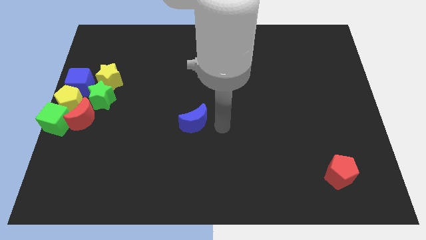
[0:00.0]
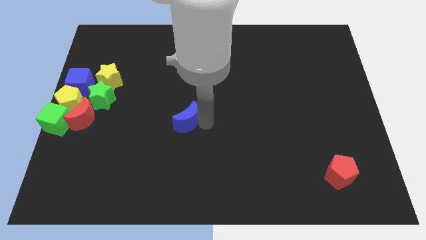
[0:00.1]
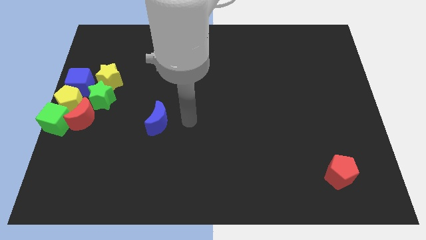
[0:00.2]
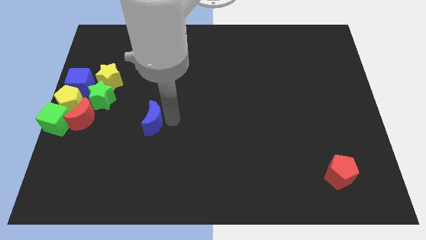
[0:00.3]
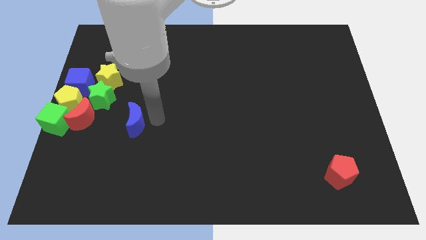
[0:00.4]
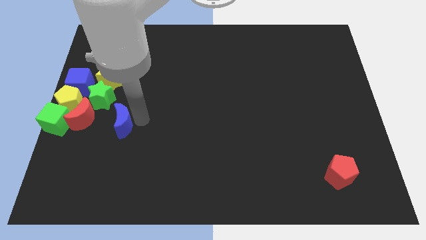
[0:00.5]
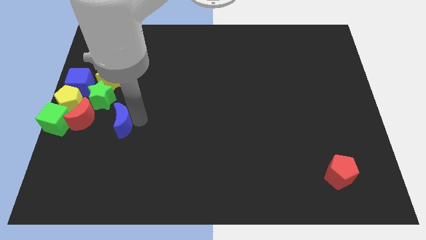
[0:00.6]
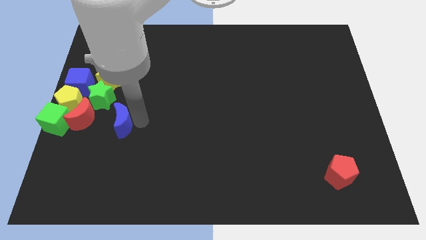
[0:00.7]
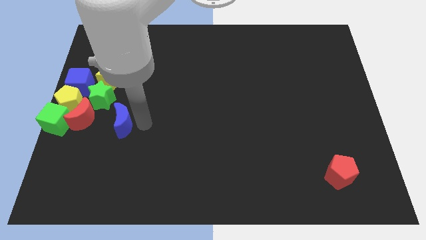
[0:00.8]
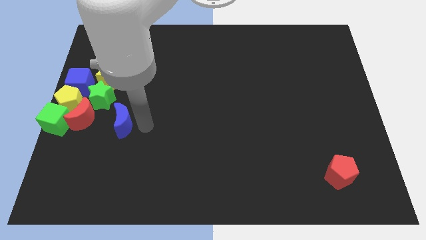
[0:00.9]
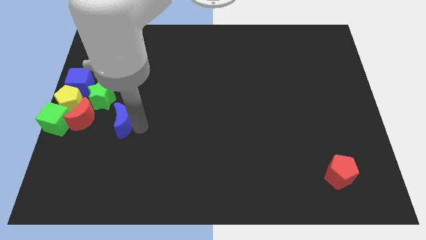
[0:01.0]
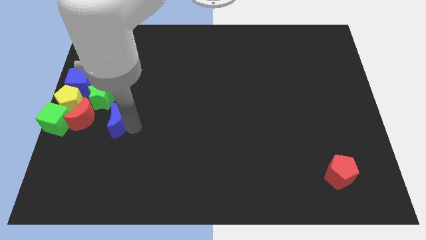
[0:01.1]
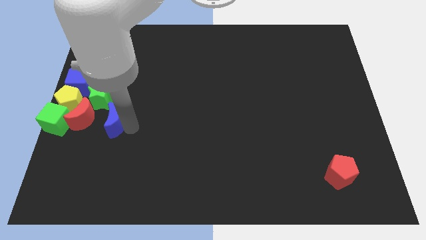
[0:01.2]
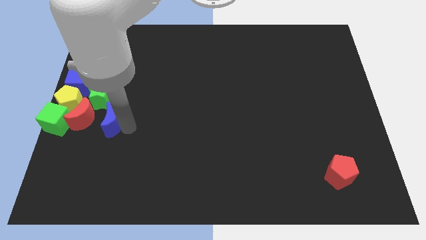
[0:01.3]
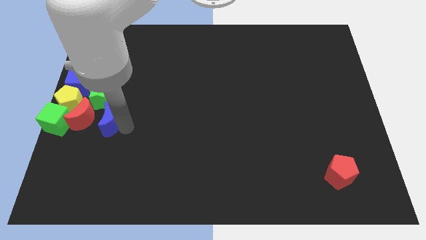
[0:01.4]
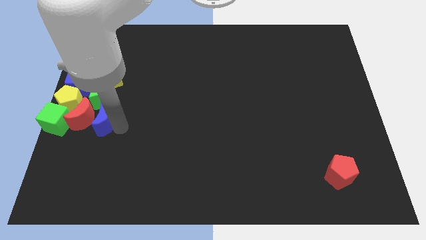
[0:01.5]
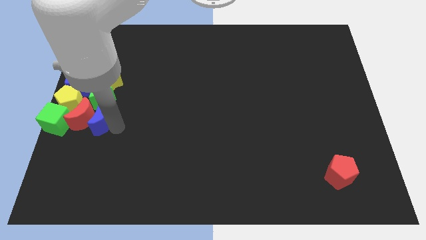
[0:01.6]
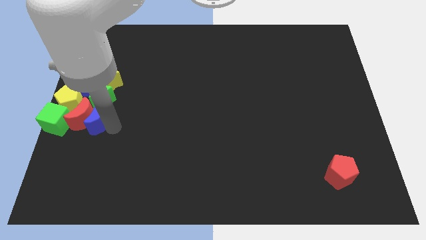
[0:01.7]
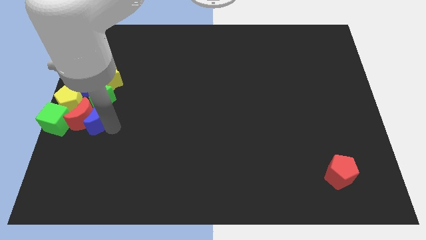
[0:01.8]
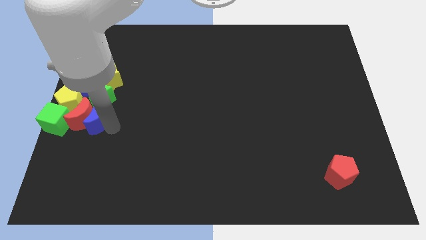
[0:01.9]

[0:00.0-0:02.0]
drag the blue moon into the group of blocks

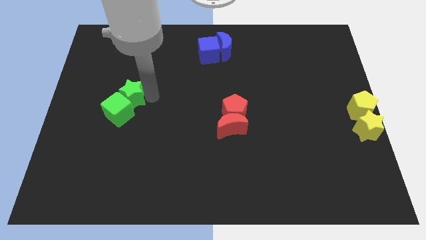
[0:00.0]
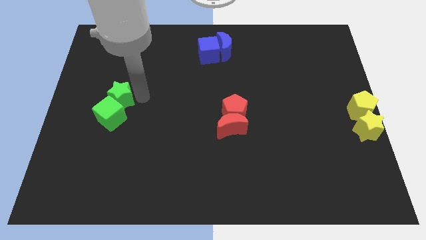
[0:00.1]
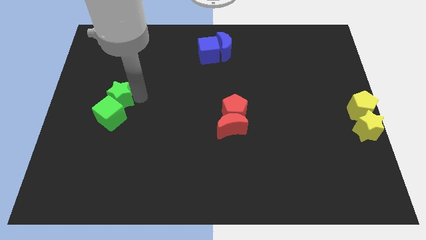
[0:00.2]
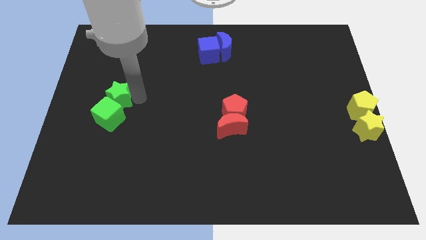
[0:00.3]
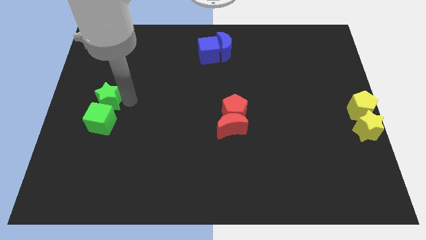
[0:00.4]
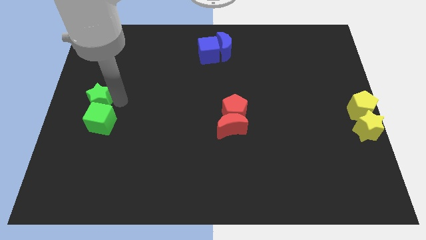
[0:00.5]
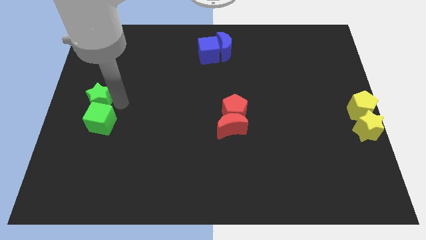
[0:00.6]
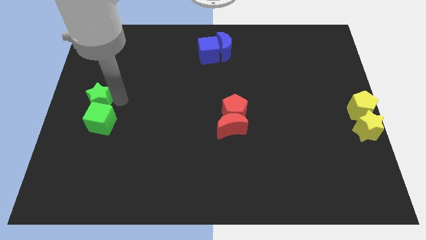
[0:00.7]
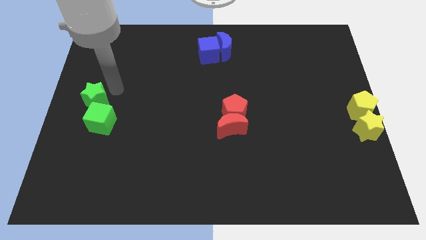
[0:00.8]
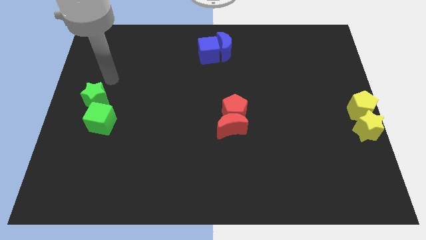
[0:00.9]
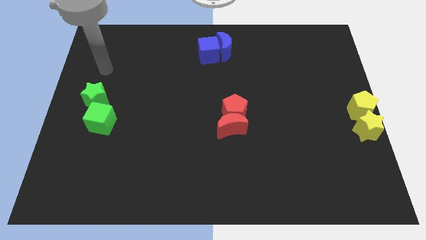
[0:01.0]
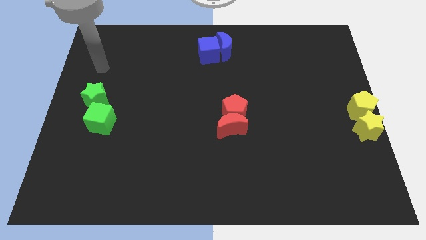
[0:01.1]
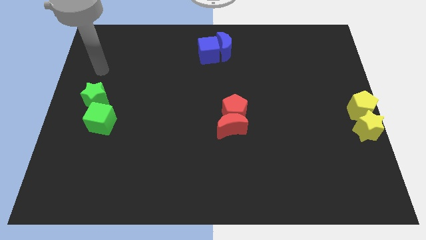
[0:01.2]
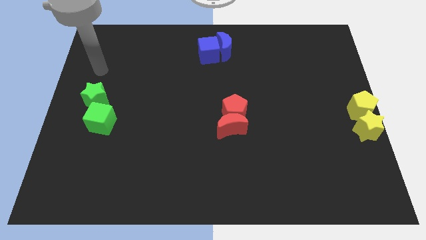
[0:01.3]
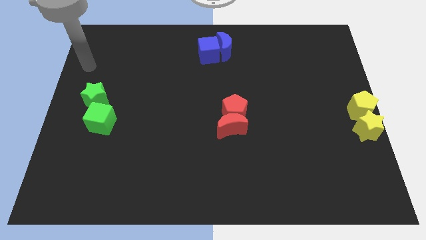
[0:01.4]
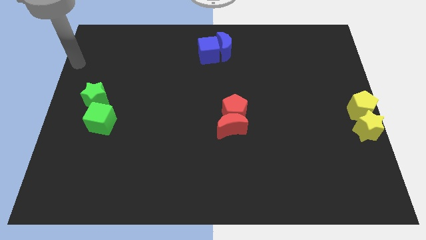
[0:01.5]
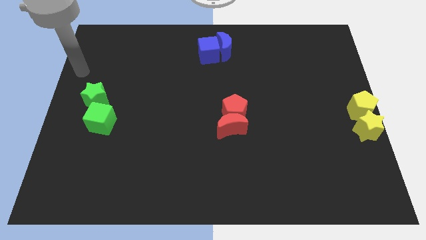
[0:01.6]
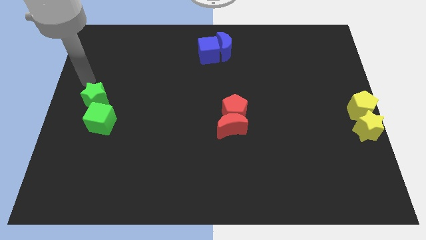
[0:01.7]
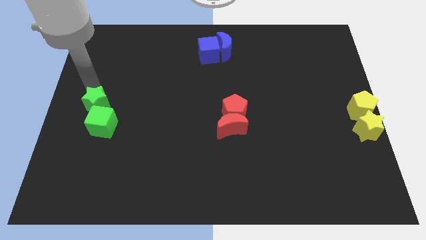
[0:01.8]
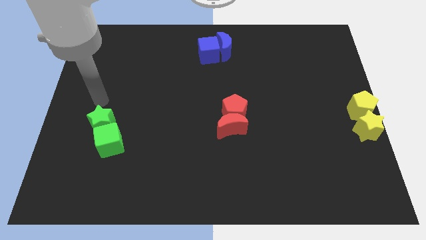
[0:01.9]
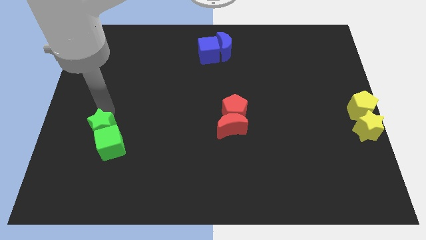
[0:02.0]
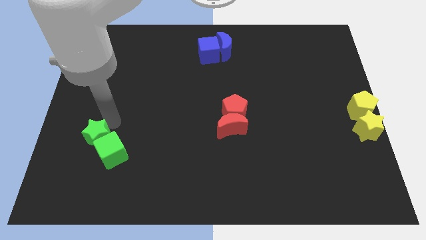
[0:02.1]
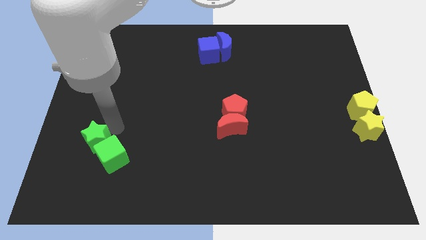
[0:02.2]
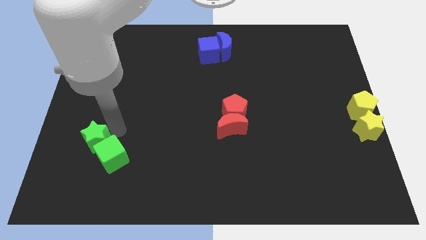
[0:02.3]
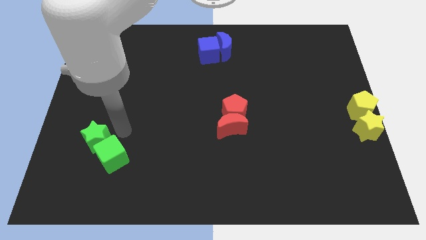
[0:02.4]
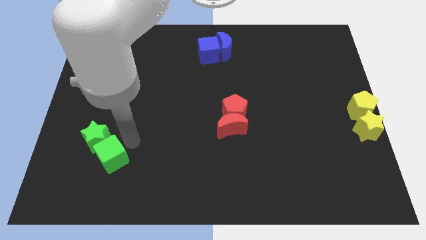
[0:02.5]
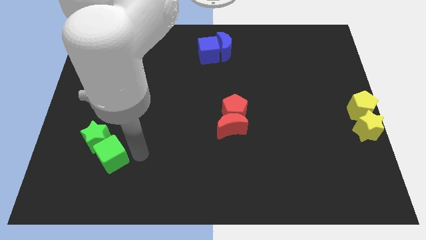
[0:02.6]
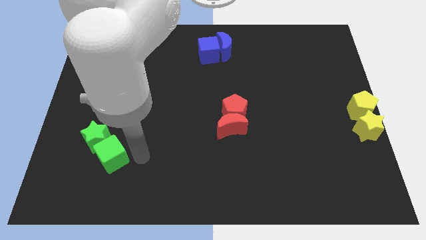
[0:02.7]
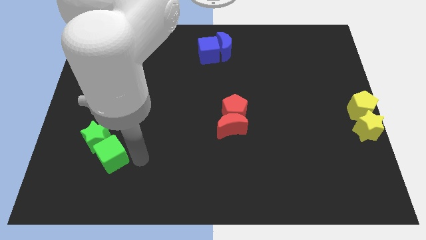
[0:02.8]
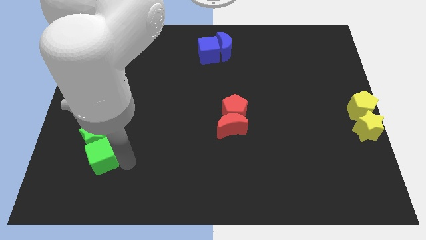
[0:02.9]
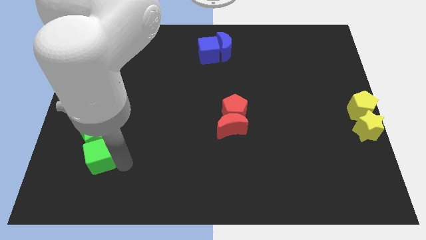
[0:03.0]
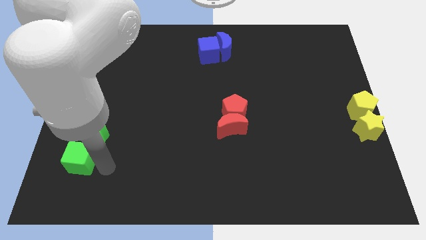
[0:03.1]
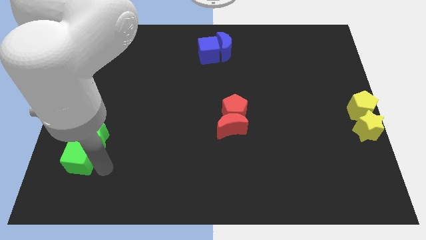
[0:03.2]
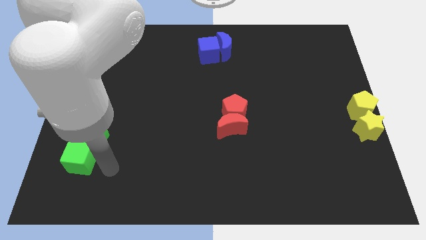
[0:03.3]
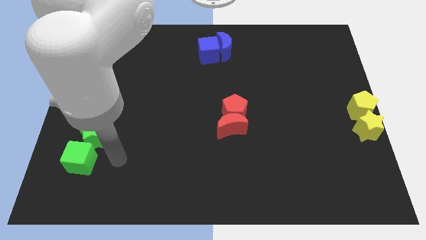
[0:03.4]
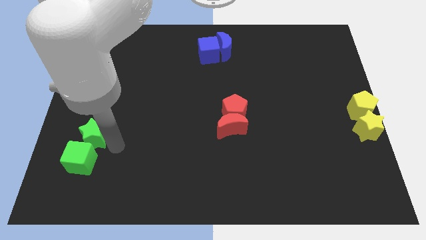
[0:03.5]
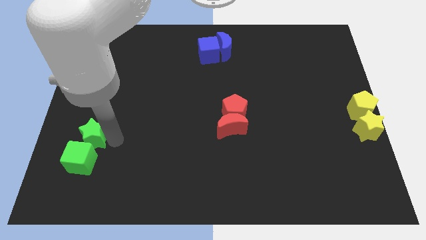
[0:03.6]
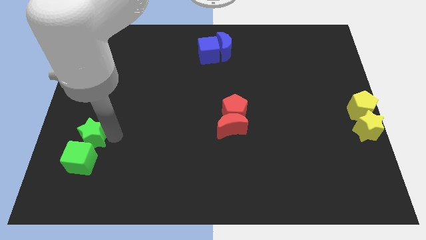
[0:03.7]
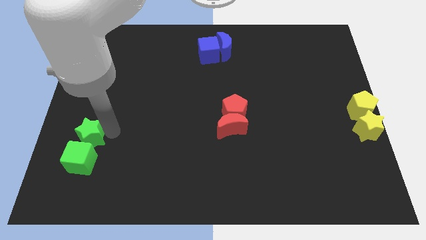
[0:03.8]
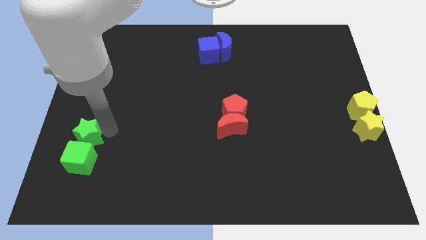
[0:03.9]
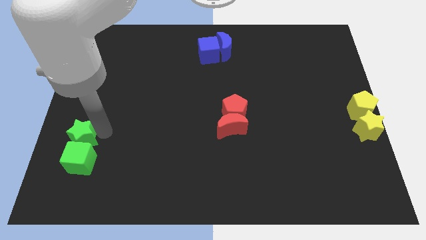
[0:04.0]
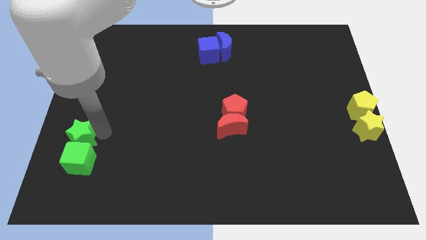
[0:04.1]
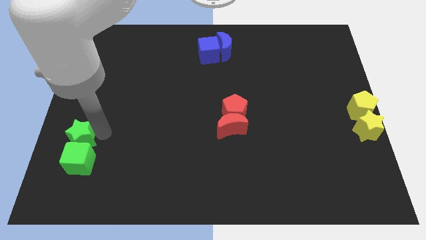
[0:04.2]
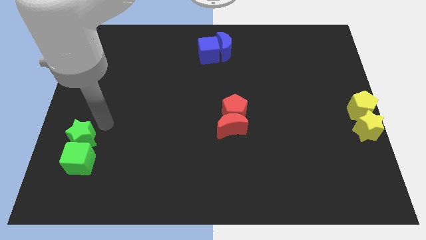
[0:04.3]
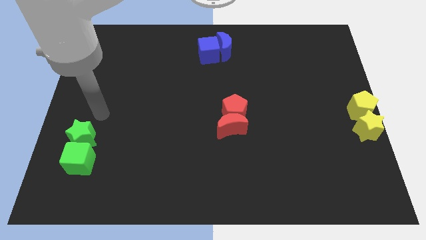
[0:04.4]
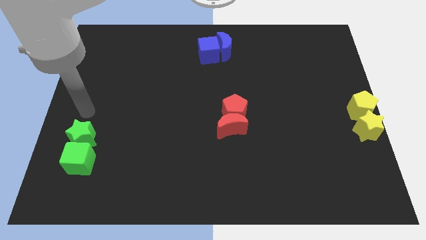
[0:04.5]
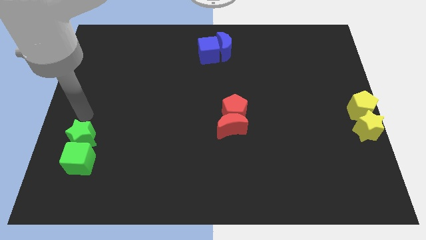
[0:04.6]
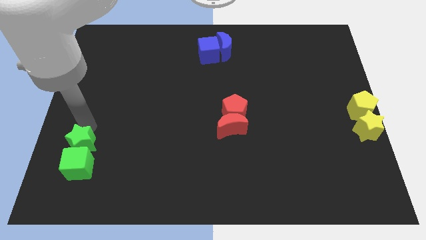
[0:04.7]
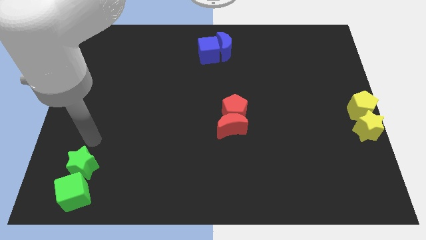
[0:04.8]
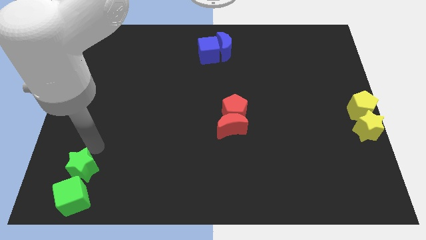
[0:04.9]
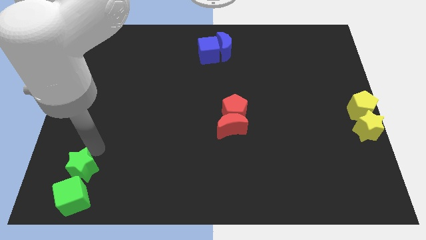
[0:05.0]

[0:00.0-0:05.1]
push the green blocks towards the bottom left corner of the board

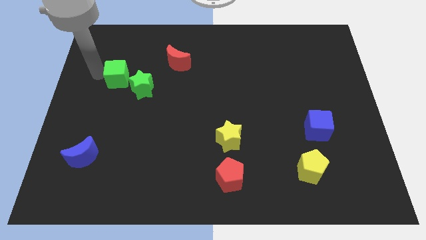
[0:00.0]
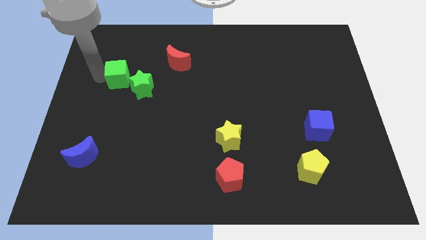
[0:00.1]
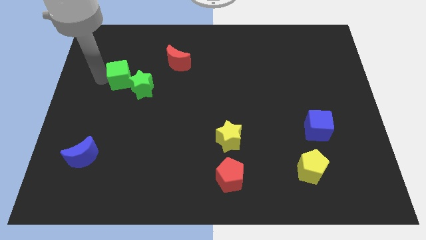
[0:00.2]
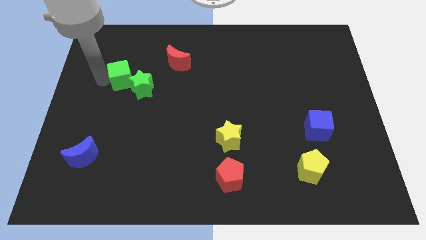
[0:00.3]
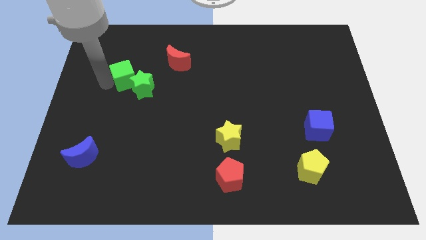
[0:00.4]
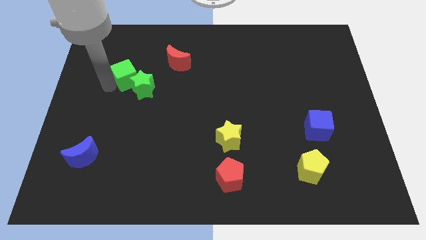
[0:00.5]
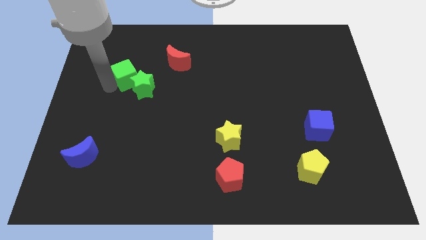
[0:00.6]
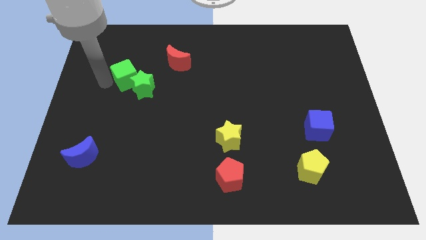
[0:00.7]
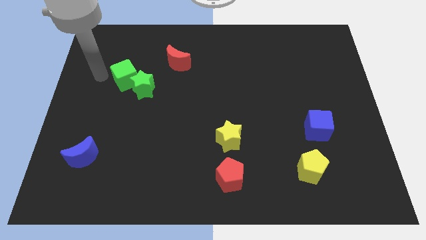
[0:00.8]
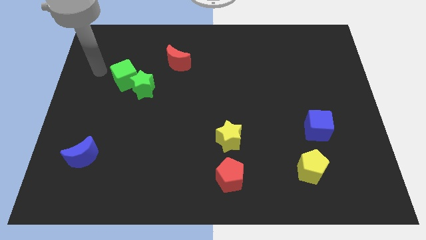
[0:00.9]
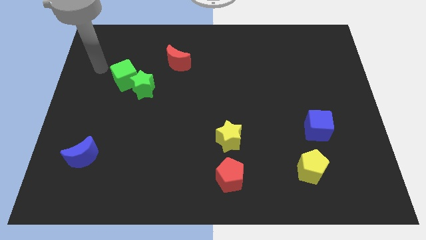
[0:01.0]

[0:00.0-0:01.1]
push the green cube into the green star diagonally

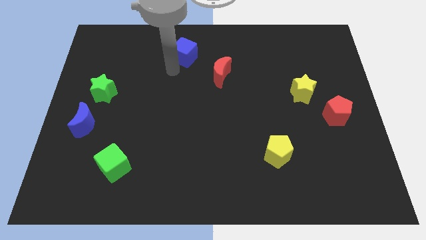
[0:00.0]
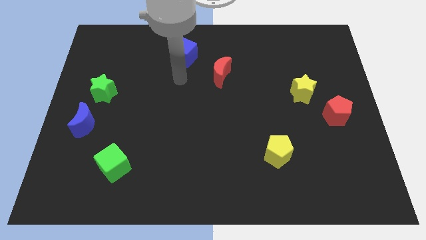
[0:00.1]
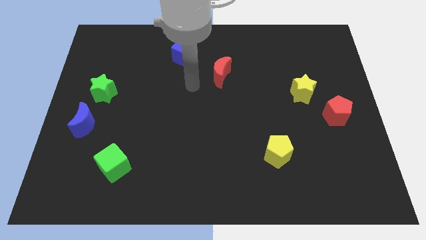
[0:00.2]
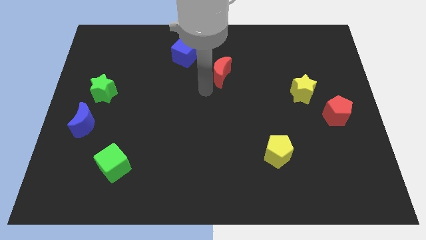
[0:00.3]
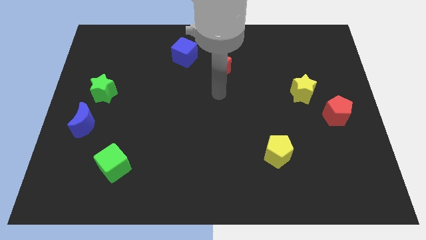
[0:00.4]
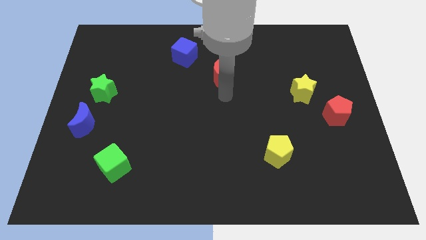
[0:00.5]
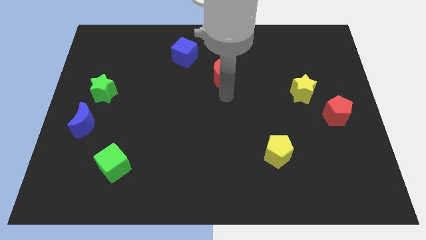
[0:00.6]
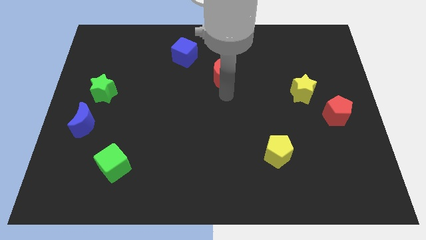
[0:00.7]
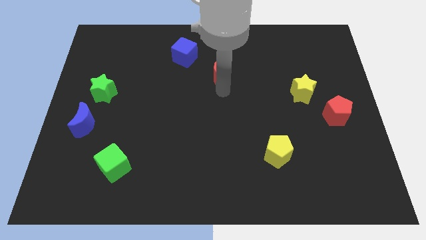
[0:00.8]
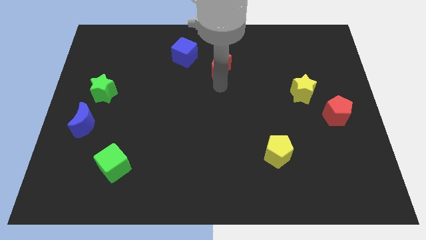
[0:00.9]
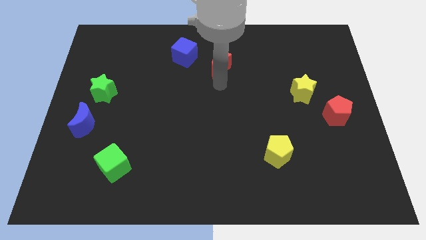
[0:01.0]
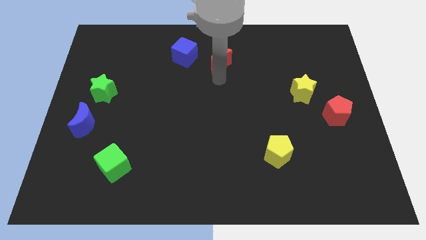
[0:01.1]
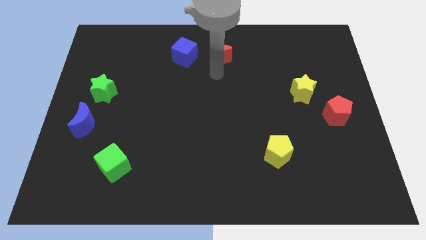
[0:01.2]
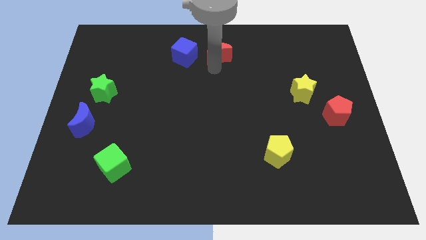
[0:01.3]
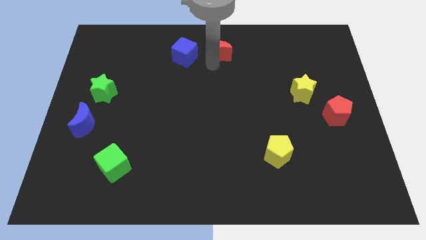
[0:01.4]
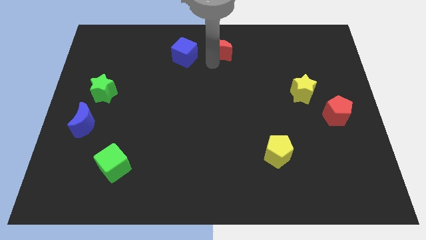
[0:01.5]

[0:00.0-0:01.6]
place red moon to the right of blue cube
